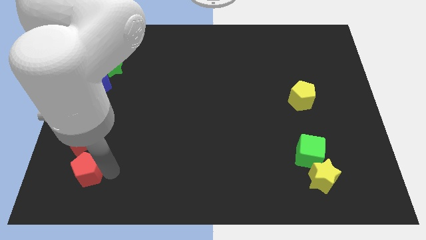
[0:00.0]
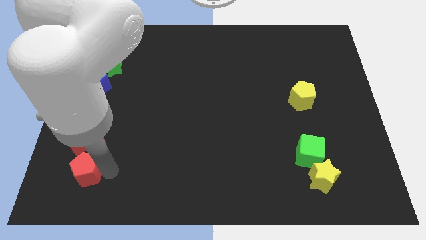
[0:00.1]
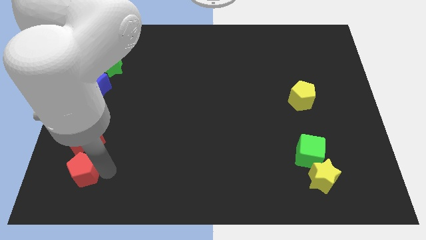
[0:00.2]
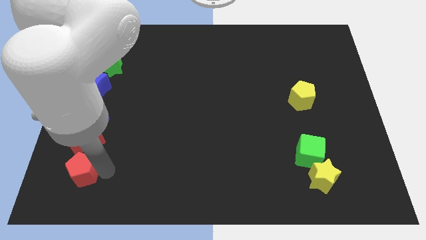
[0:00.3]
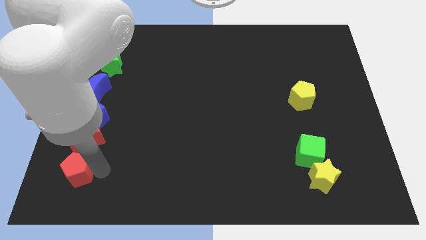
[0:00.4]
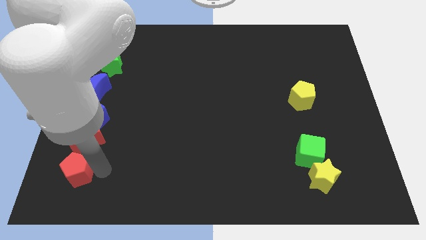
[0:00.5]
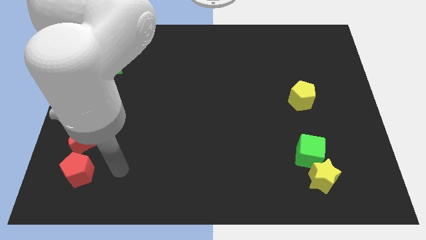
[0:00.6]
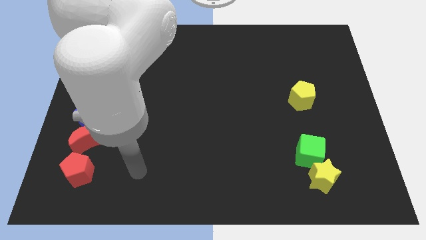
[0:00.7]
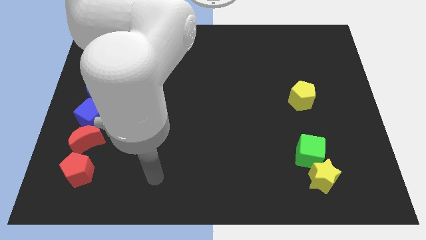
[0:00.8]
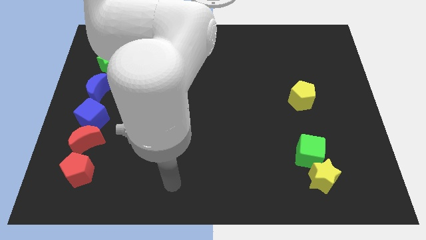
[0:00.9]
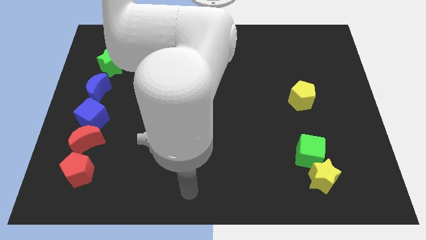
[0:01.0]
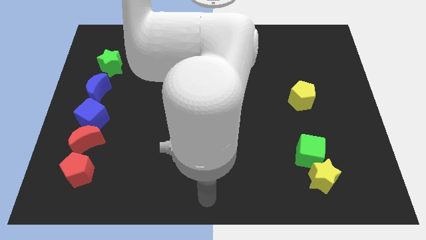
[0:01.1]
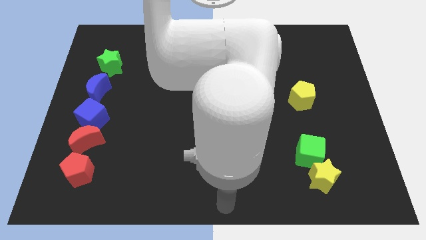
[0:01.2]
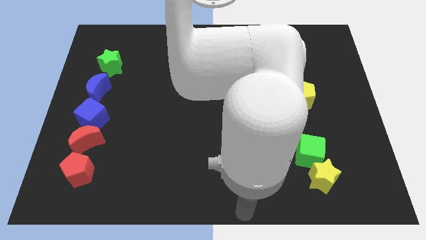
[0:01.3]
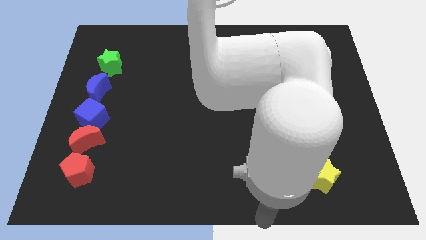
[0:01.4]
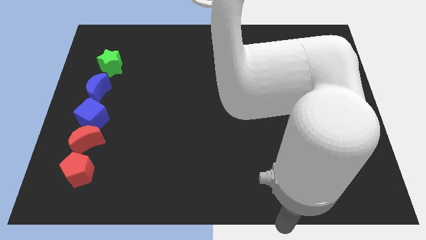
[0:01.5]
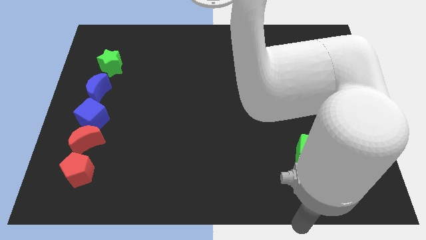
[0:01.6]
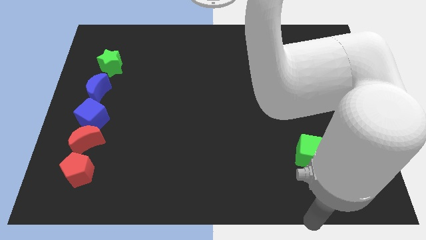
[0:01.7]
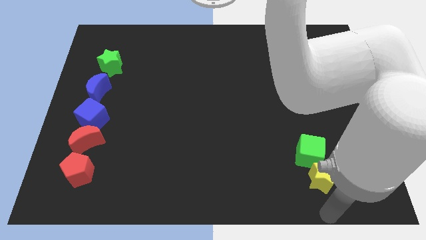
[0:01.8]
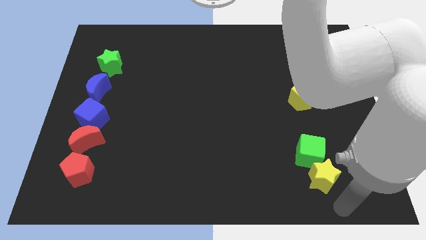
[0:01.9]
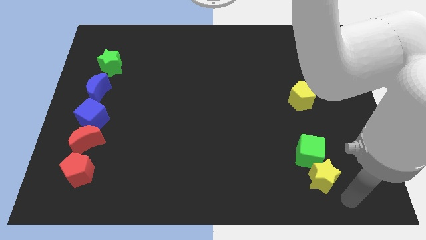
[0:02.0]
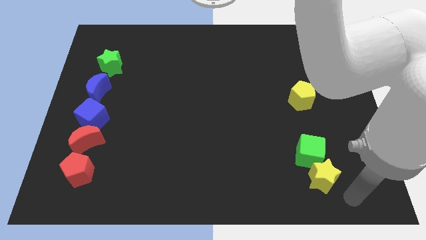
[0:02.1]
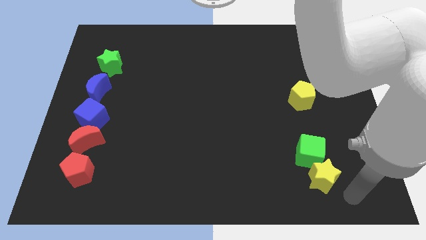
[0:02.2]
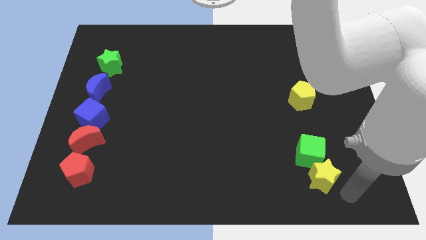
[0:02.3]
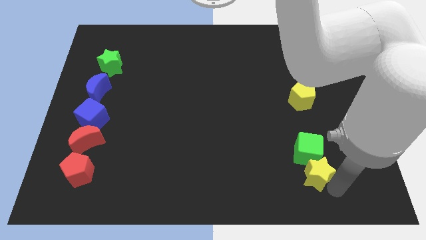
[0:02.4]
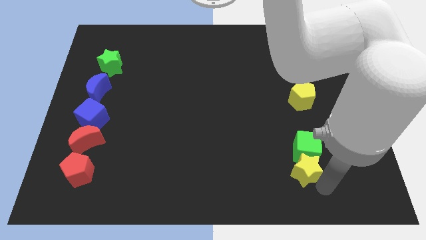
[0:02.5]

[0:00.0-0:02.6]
point your arm right to yellow star

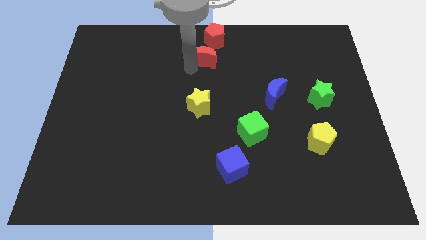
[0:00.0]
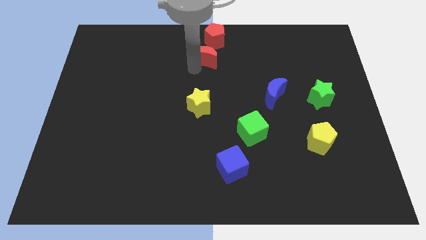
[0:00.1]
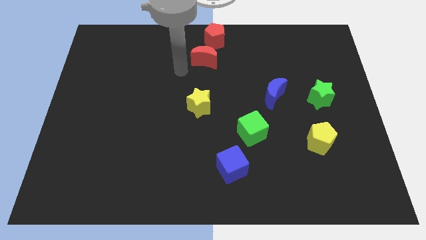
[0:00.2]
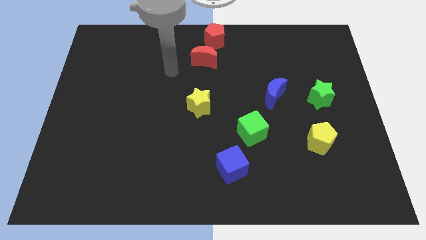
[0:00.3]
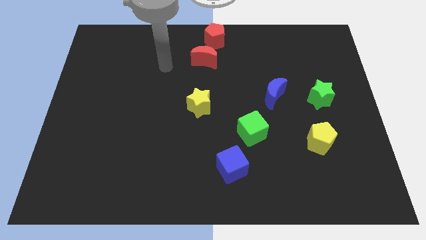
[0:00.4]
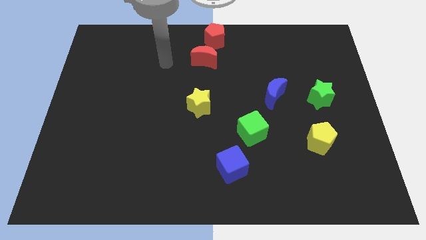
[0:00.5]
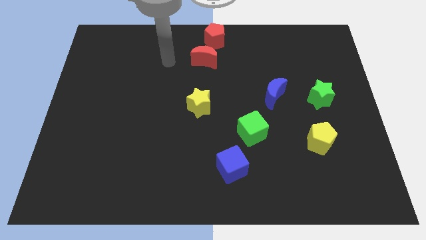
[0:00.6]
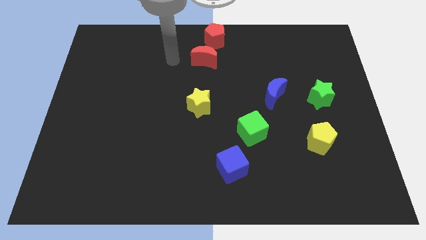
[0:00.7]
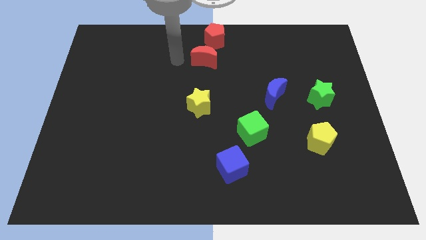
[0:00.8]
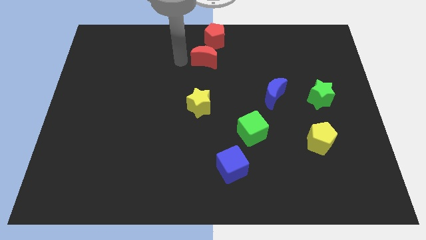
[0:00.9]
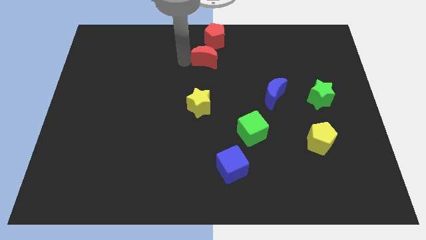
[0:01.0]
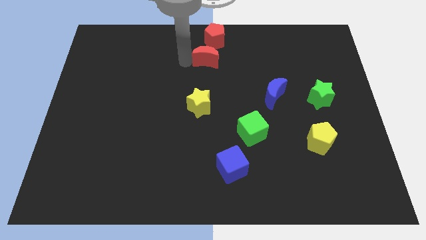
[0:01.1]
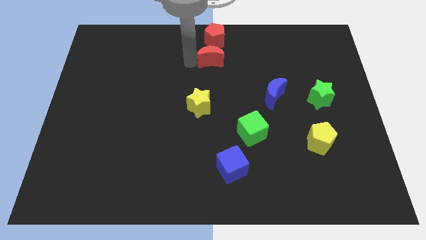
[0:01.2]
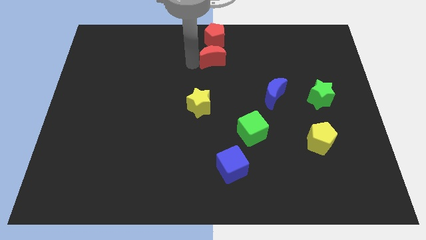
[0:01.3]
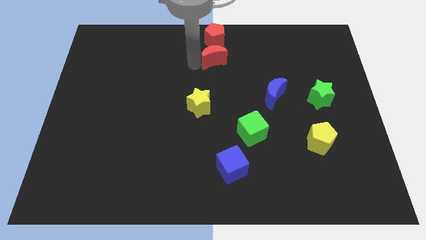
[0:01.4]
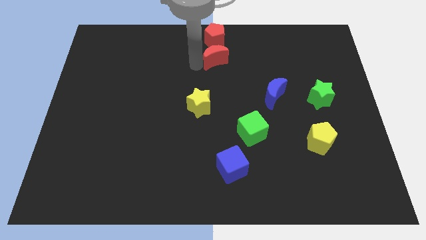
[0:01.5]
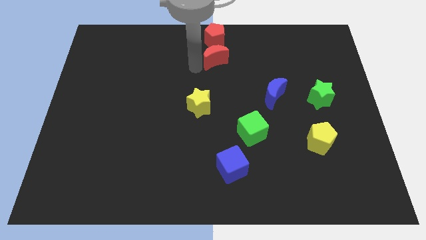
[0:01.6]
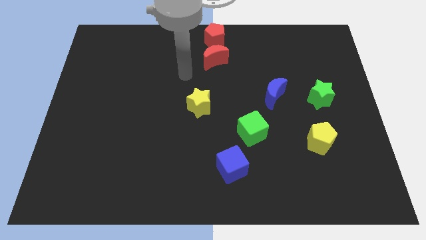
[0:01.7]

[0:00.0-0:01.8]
place the red crescent below the red pentagon

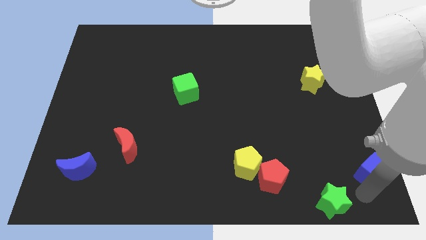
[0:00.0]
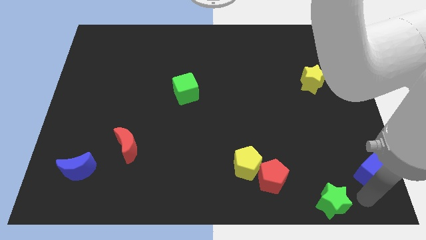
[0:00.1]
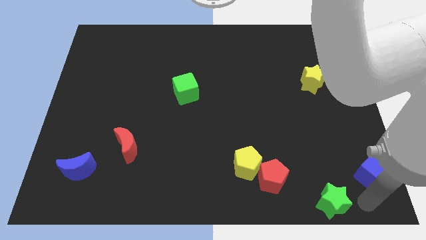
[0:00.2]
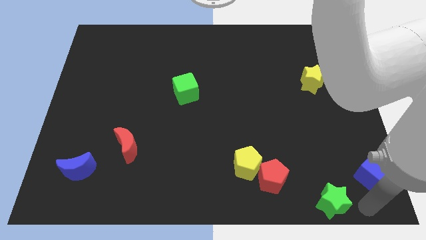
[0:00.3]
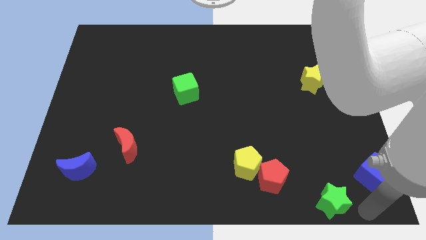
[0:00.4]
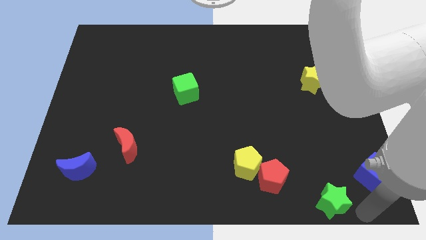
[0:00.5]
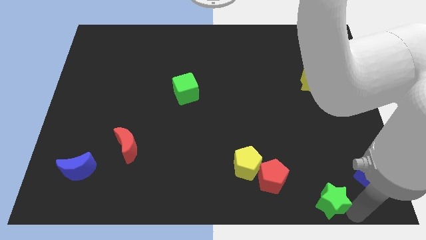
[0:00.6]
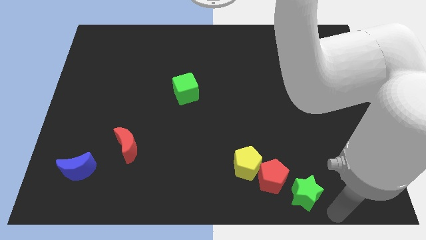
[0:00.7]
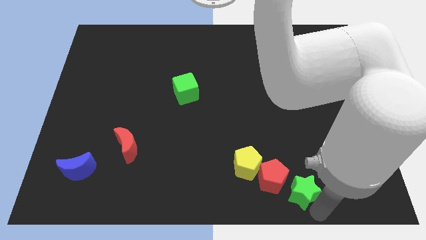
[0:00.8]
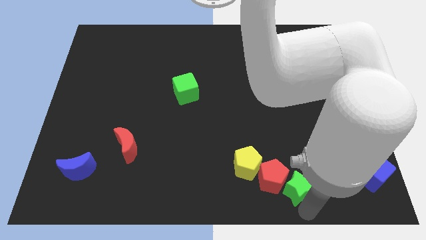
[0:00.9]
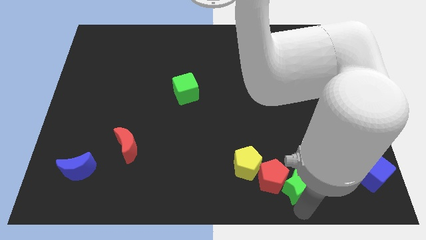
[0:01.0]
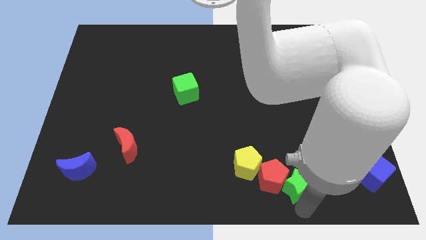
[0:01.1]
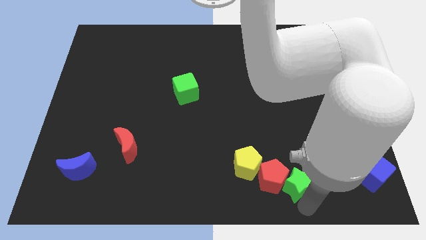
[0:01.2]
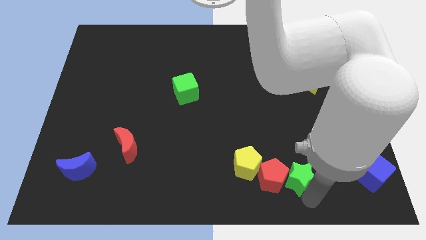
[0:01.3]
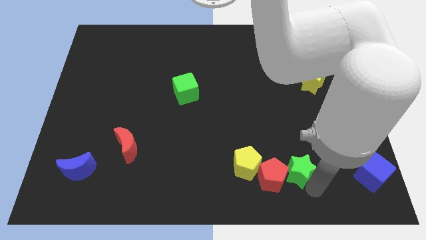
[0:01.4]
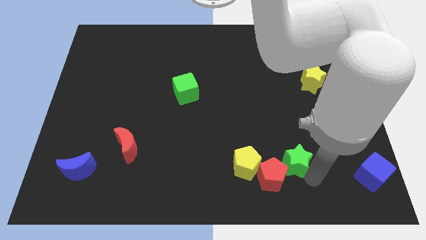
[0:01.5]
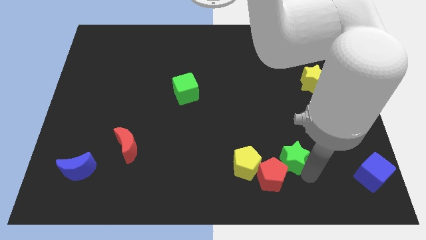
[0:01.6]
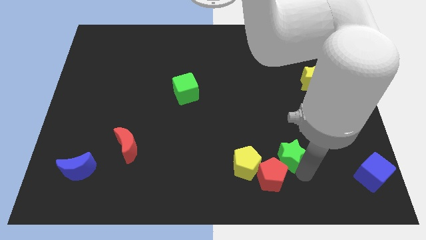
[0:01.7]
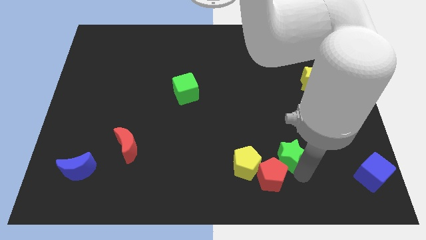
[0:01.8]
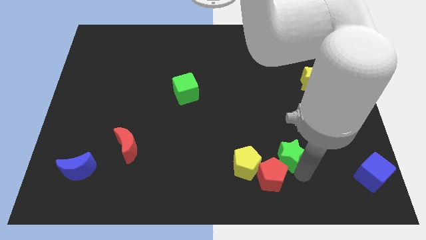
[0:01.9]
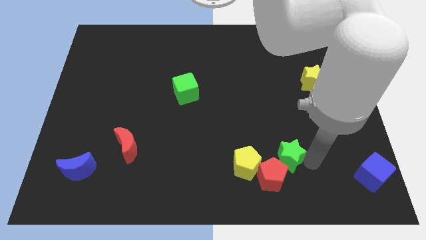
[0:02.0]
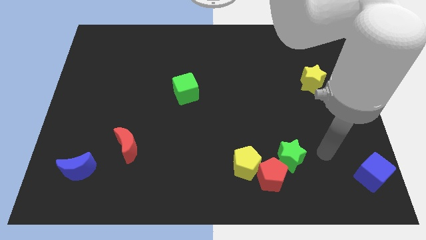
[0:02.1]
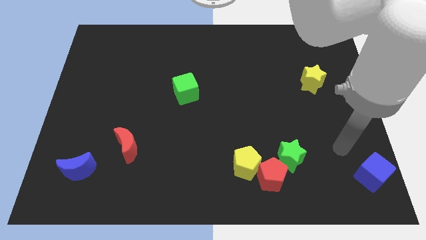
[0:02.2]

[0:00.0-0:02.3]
move the green star to the top right of the red pentagon

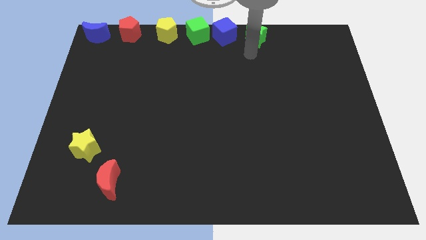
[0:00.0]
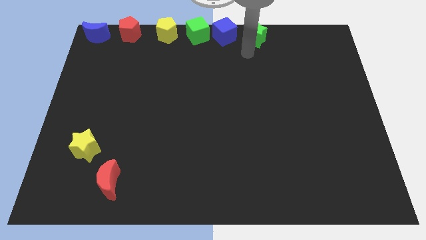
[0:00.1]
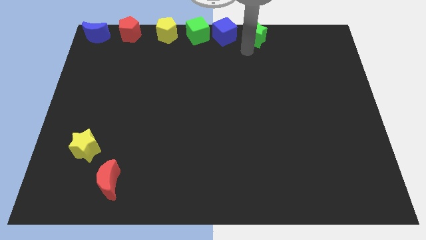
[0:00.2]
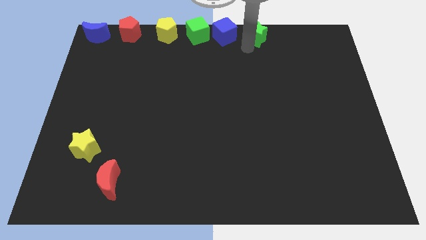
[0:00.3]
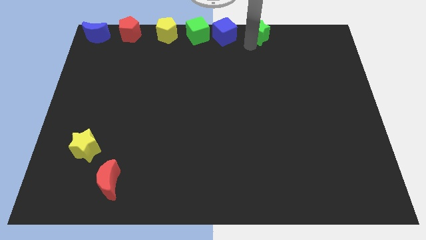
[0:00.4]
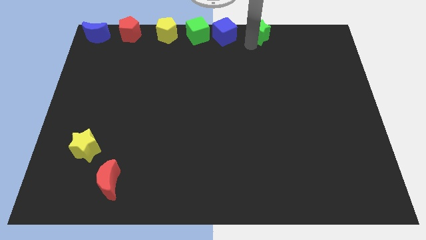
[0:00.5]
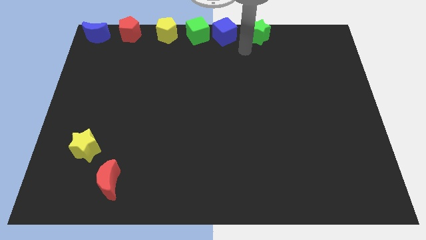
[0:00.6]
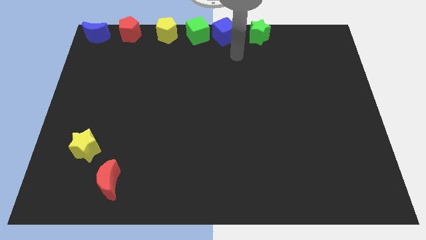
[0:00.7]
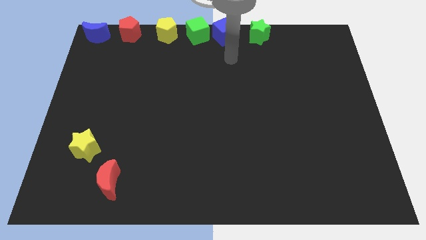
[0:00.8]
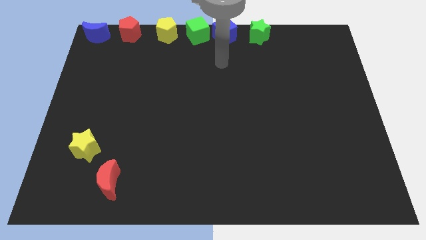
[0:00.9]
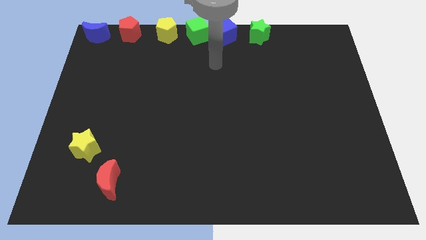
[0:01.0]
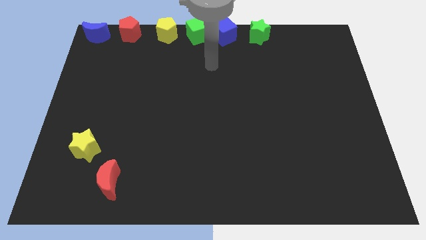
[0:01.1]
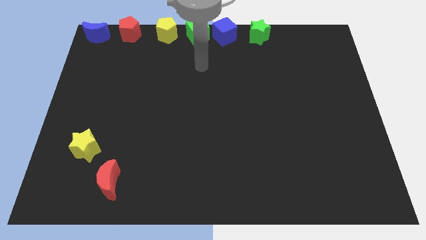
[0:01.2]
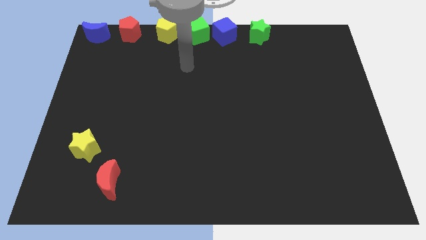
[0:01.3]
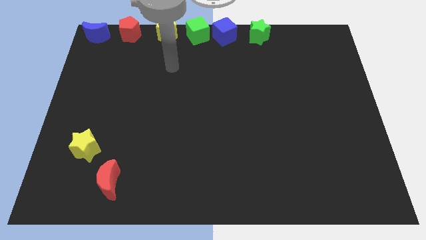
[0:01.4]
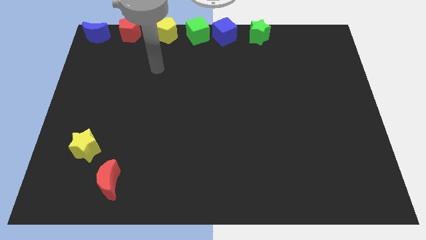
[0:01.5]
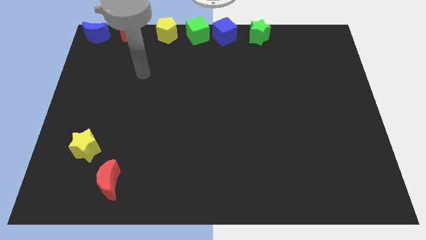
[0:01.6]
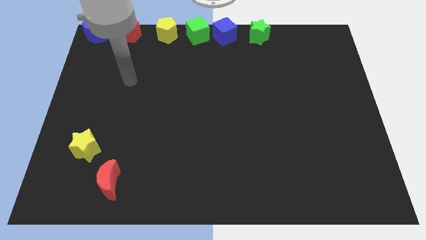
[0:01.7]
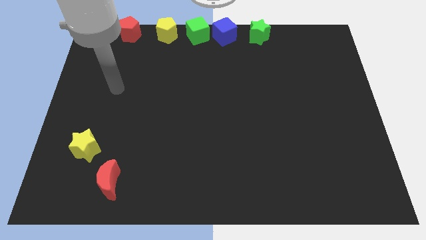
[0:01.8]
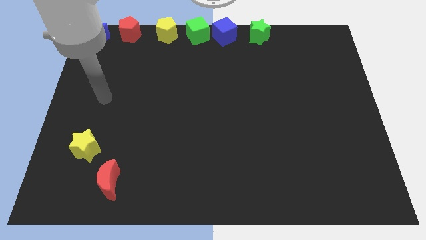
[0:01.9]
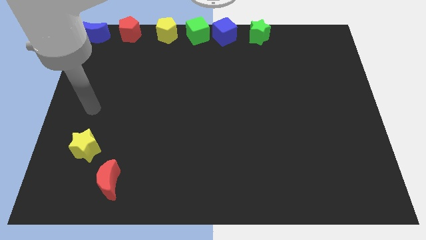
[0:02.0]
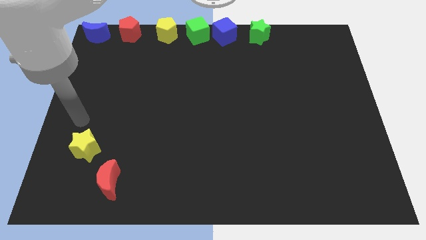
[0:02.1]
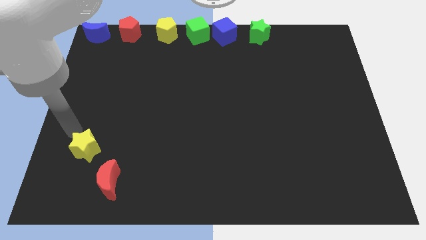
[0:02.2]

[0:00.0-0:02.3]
move your arm away from the green star
